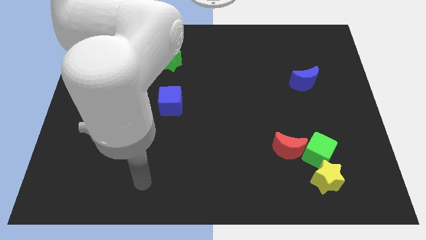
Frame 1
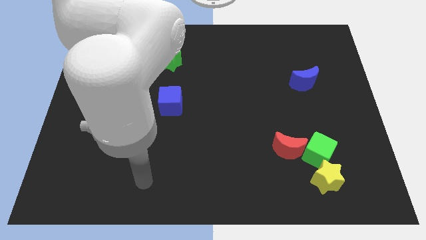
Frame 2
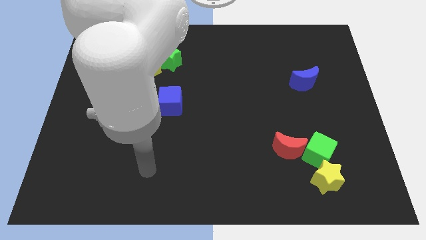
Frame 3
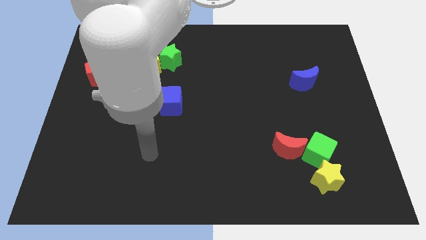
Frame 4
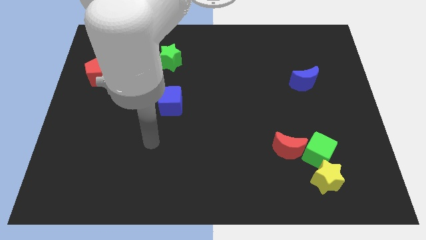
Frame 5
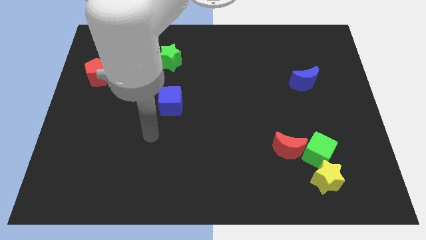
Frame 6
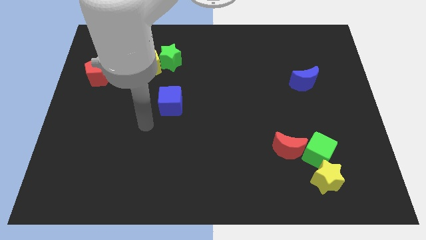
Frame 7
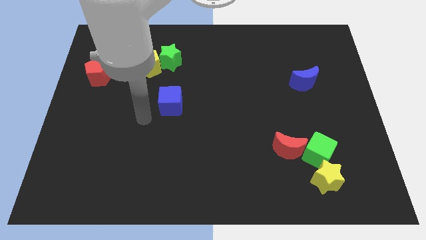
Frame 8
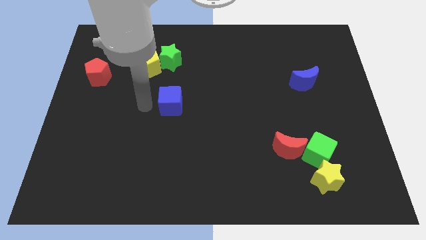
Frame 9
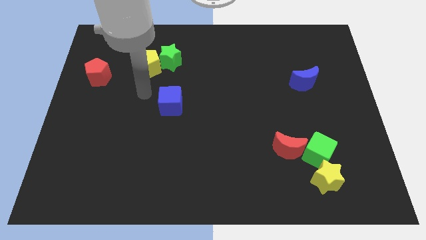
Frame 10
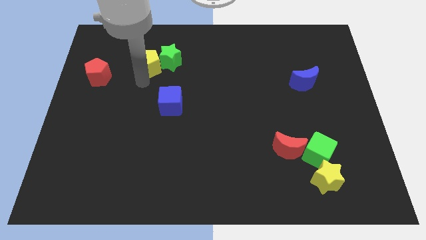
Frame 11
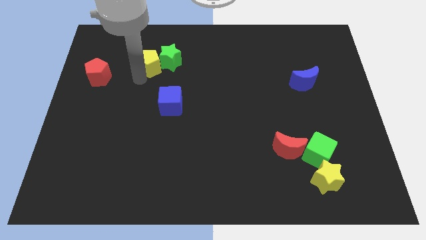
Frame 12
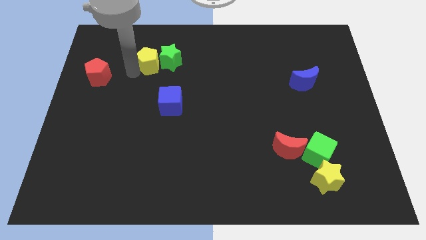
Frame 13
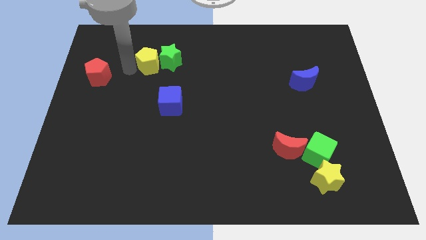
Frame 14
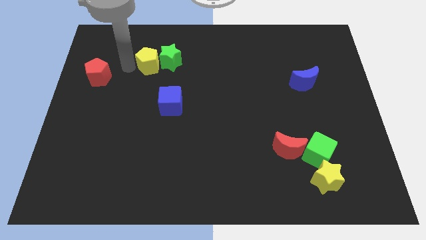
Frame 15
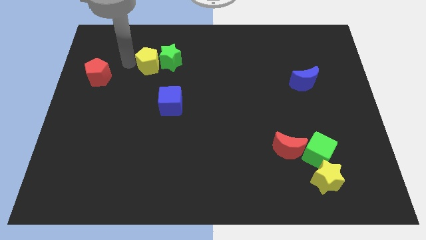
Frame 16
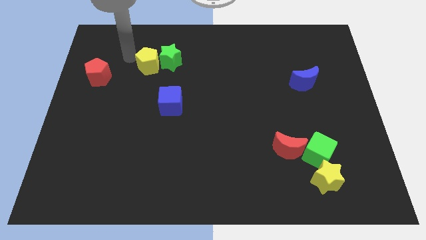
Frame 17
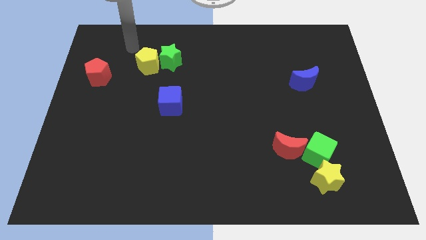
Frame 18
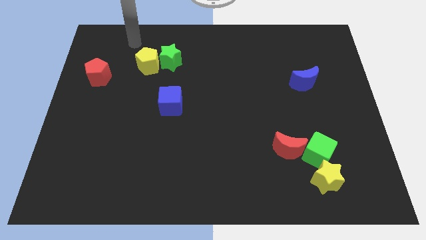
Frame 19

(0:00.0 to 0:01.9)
slightly move the yellow pentagon to the left of green star

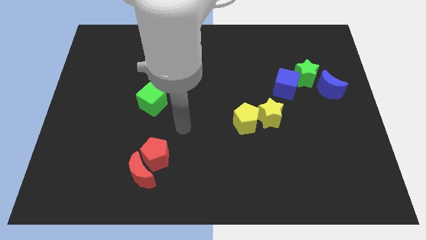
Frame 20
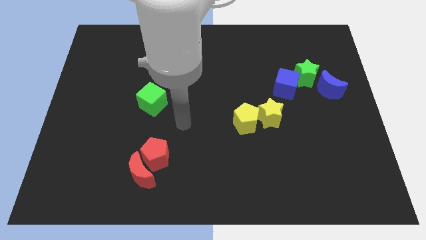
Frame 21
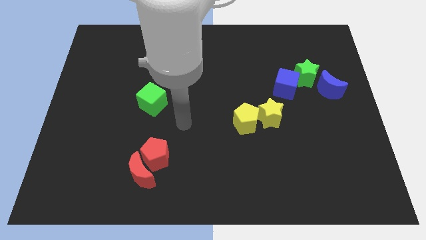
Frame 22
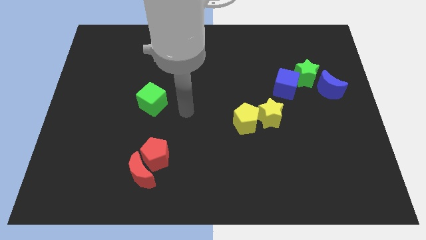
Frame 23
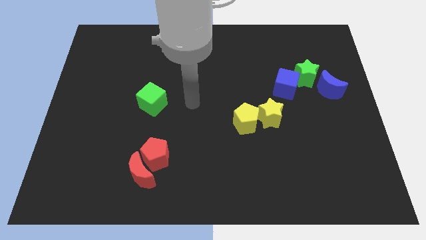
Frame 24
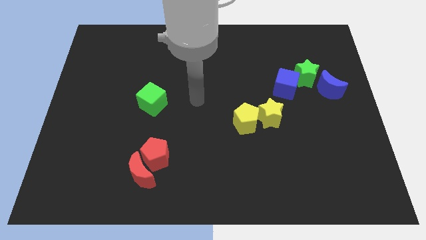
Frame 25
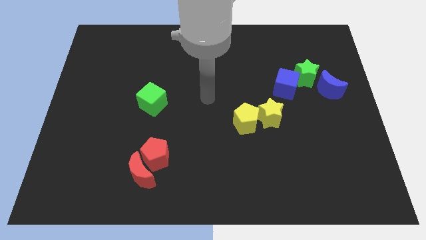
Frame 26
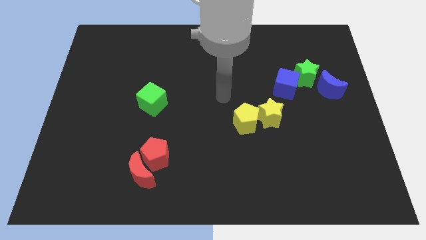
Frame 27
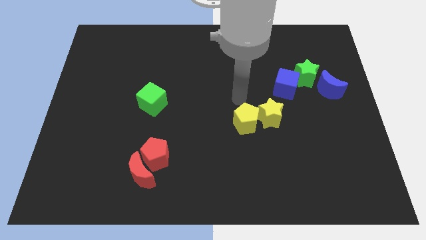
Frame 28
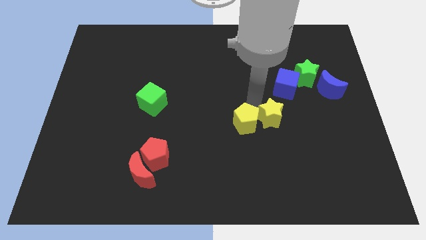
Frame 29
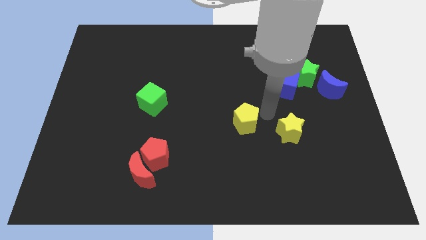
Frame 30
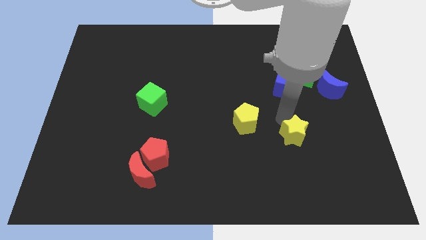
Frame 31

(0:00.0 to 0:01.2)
slightly push the yellow star diagonally down

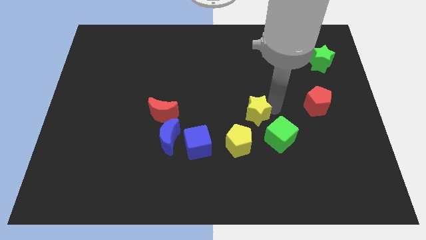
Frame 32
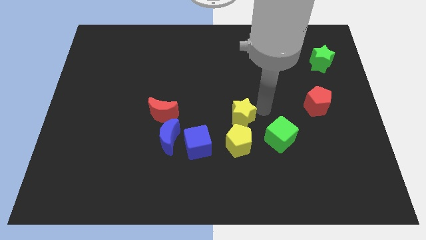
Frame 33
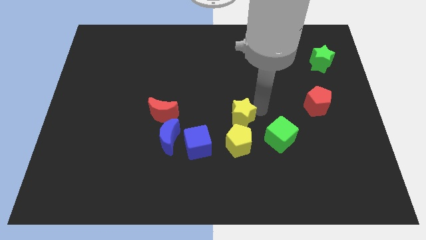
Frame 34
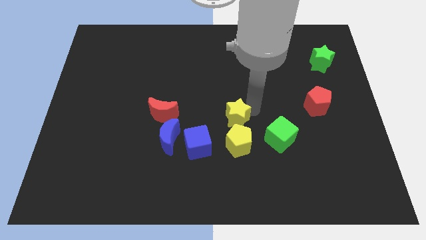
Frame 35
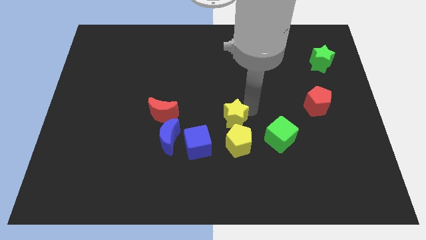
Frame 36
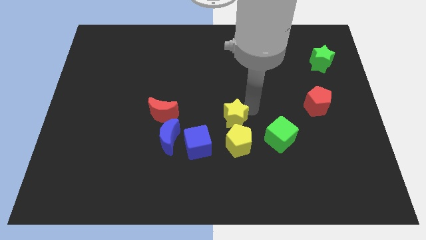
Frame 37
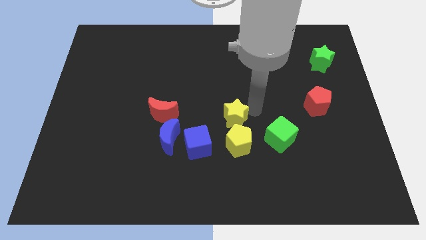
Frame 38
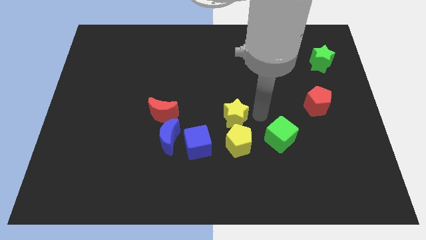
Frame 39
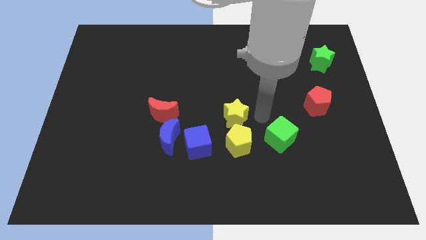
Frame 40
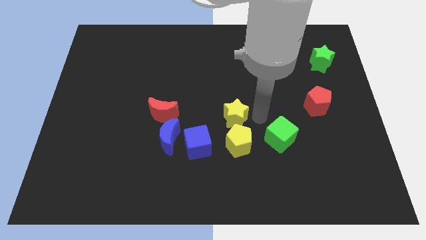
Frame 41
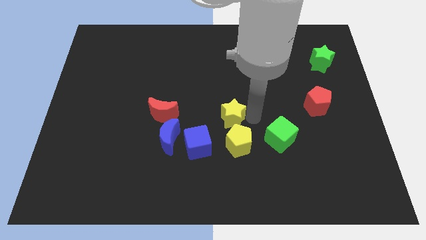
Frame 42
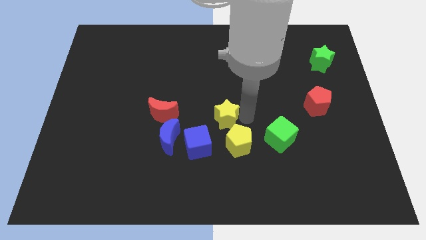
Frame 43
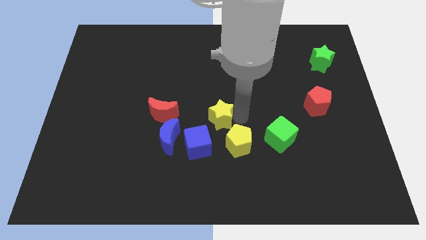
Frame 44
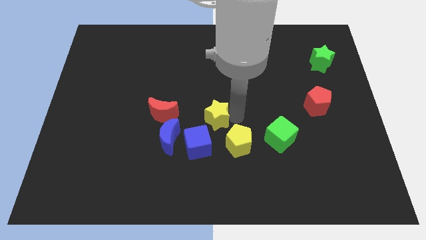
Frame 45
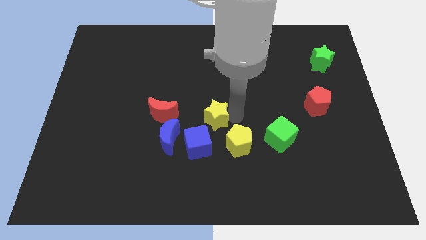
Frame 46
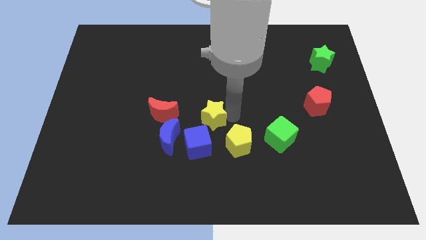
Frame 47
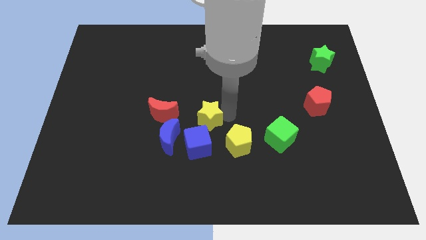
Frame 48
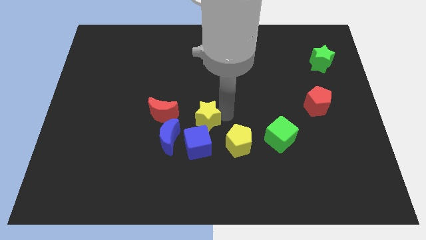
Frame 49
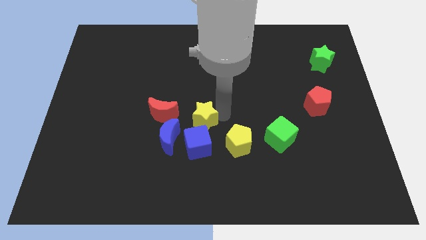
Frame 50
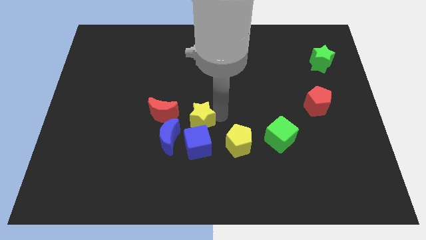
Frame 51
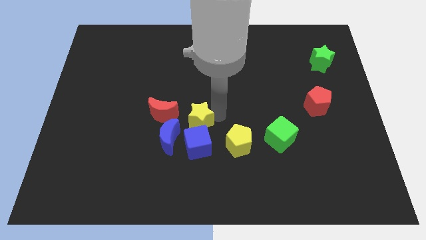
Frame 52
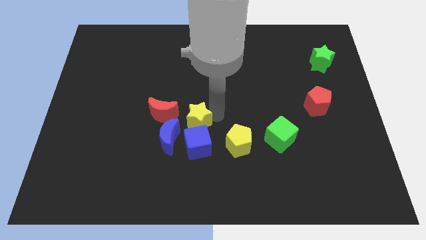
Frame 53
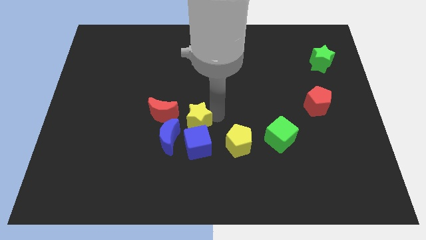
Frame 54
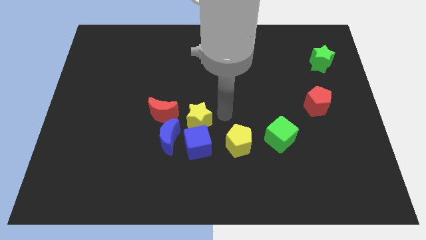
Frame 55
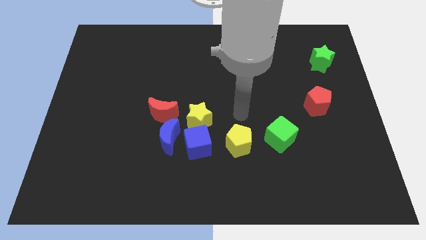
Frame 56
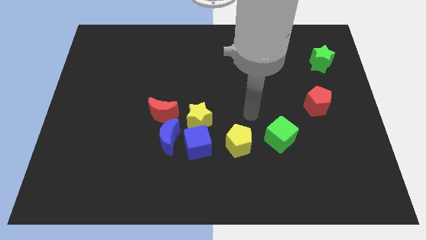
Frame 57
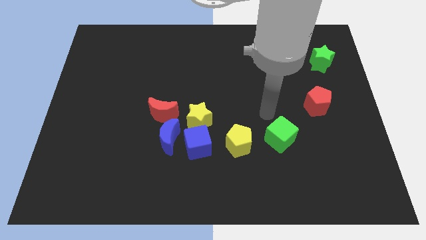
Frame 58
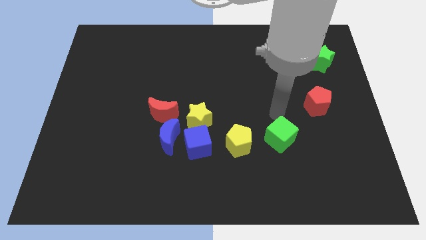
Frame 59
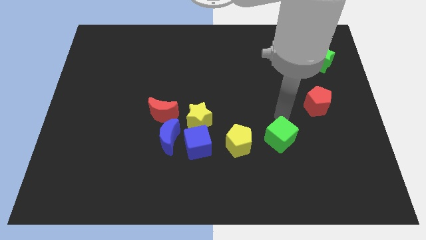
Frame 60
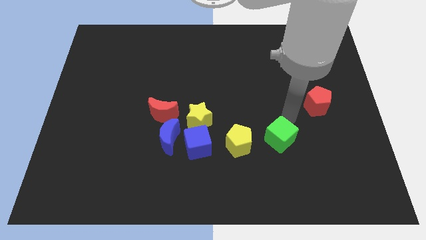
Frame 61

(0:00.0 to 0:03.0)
move the yellow star to the top of the blue cube

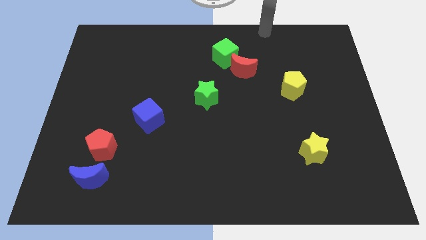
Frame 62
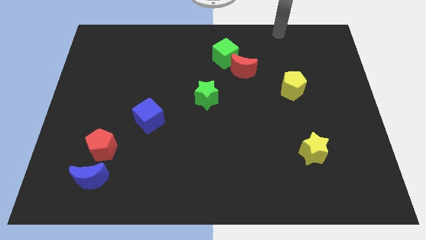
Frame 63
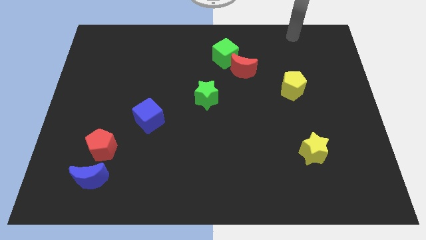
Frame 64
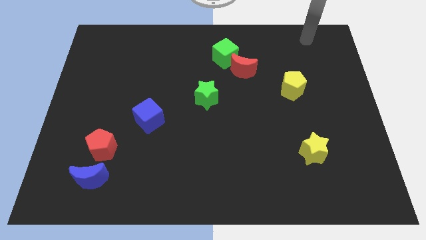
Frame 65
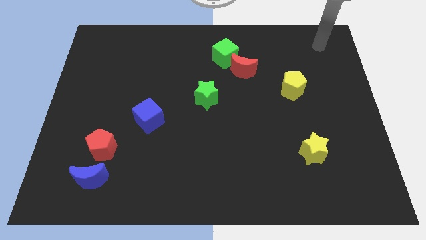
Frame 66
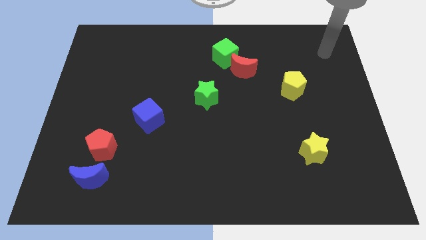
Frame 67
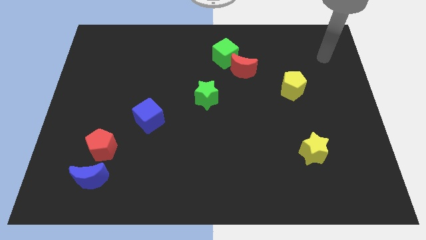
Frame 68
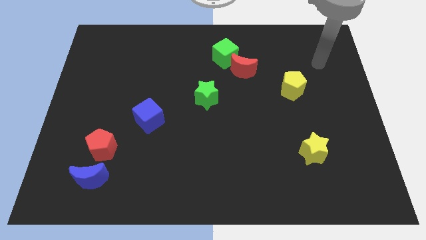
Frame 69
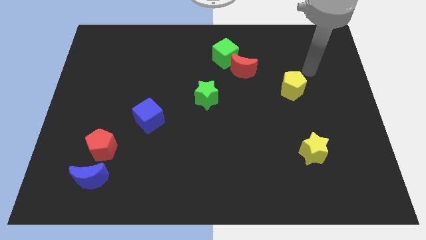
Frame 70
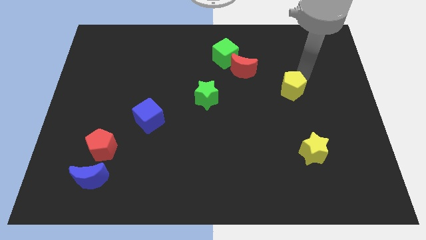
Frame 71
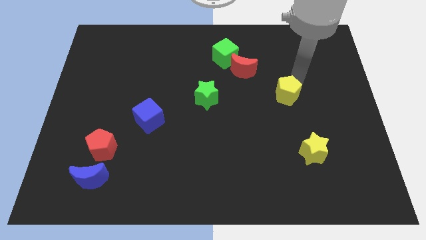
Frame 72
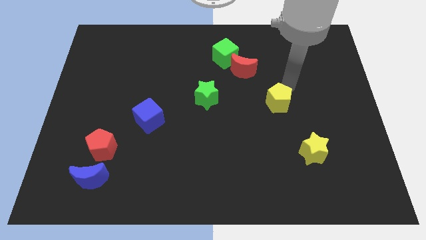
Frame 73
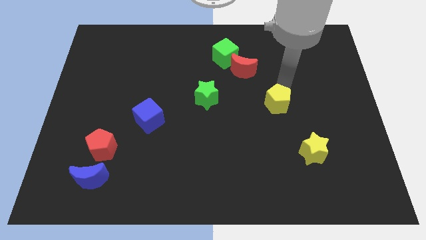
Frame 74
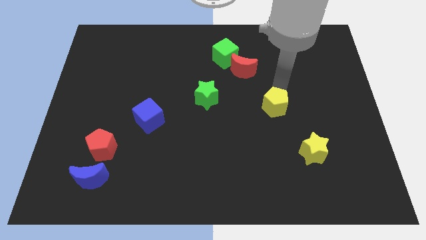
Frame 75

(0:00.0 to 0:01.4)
move the yellow pentagon between the red moon and yellow star

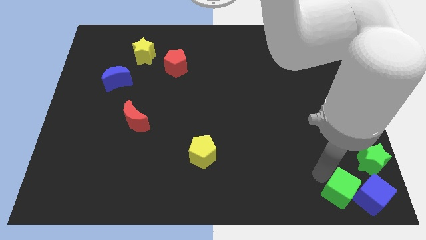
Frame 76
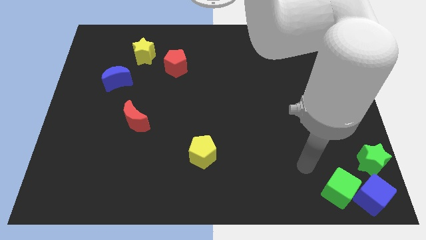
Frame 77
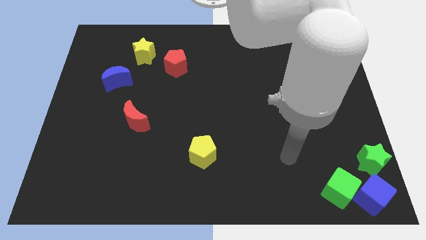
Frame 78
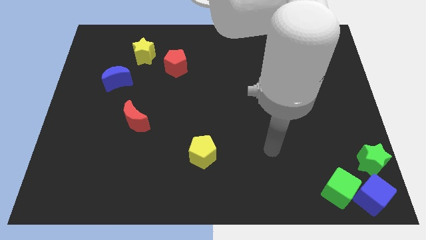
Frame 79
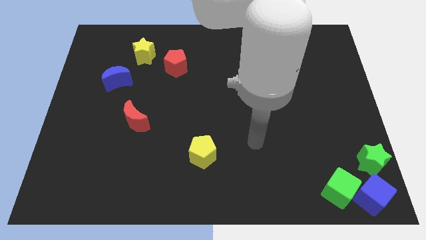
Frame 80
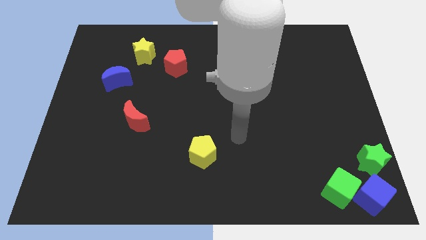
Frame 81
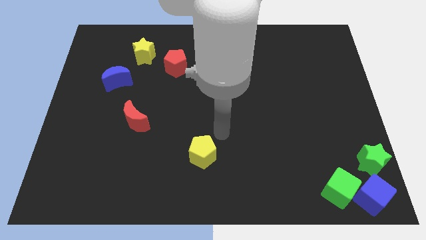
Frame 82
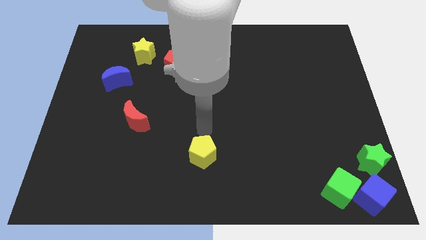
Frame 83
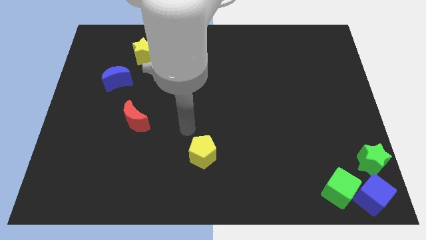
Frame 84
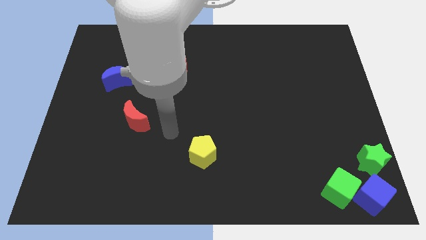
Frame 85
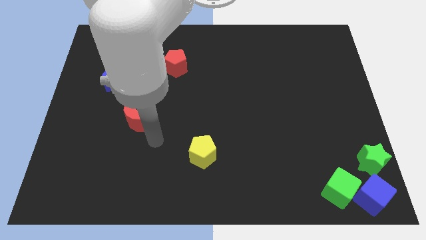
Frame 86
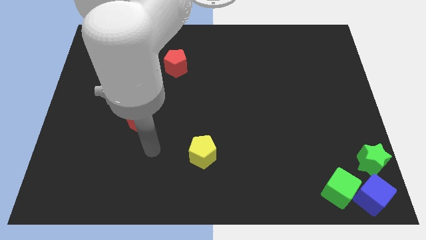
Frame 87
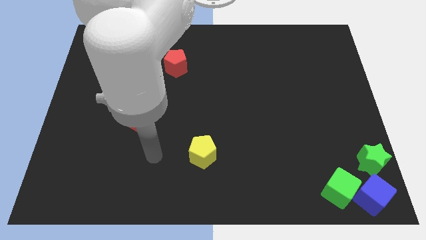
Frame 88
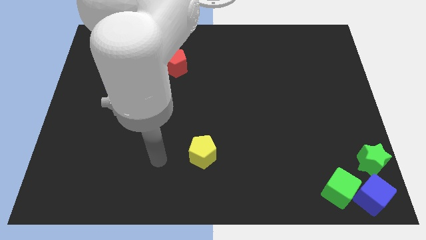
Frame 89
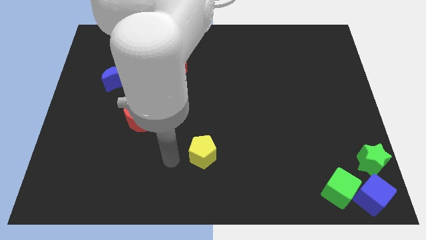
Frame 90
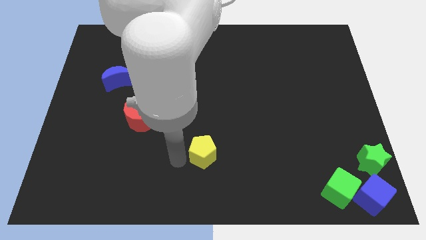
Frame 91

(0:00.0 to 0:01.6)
point your arm at the left of the yellow pentagon
